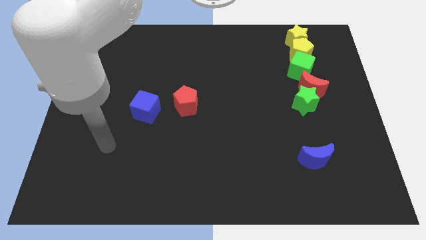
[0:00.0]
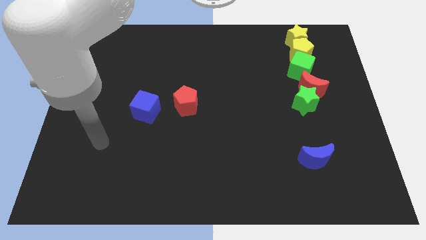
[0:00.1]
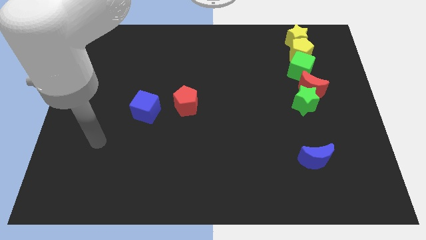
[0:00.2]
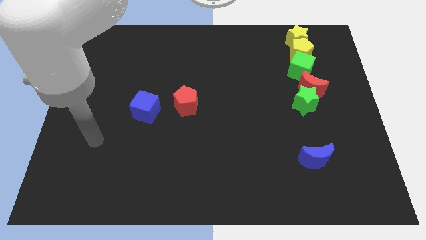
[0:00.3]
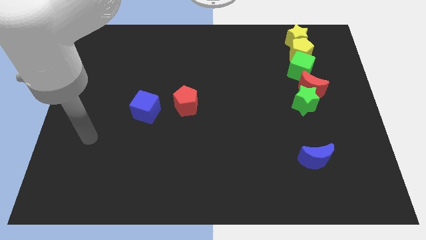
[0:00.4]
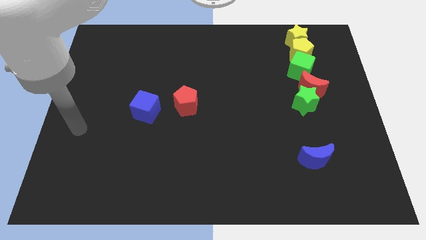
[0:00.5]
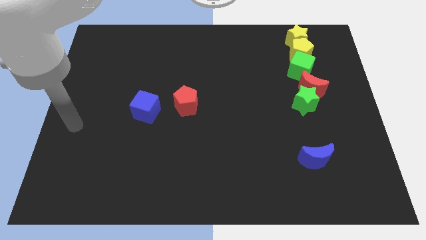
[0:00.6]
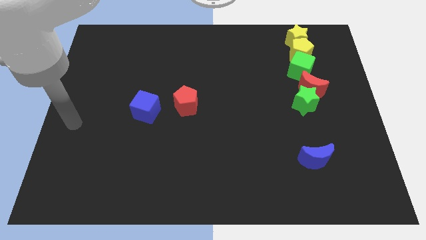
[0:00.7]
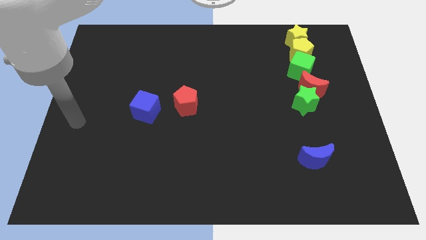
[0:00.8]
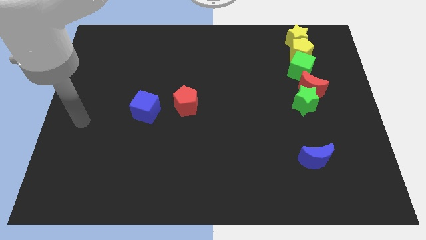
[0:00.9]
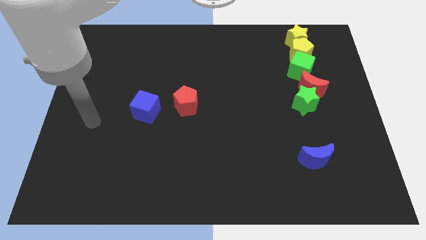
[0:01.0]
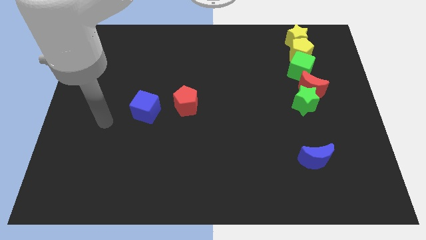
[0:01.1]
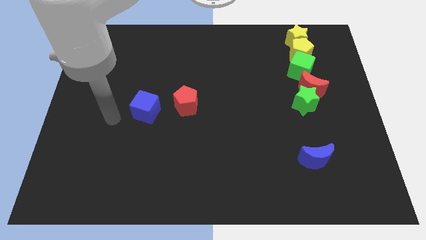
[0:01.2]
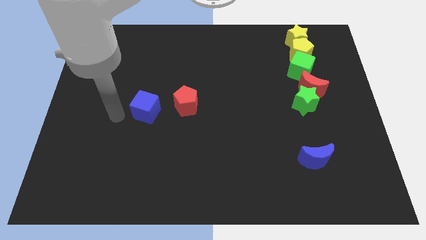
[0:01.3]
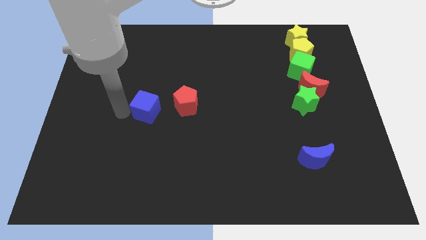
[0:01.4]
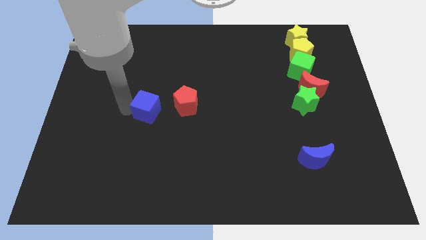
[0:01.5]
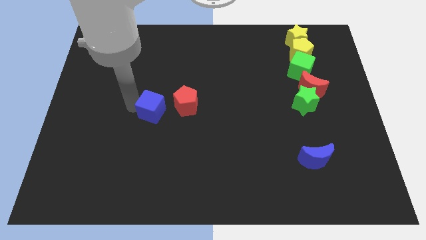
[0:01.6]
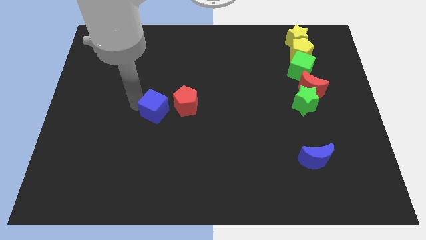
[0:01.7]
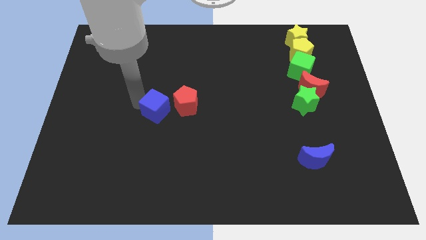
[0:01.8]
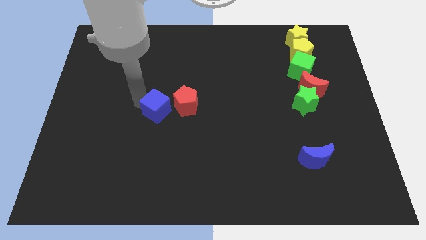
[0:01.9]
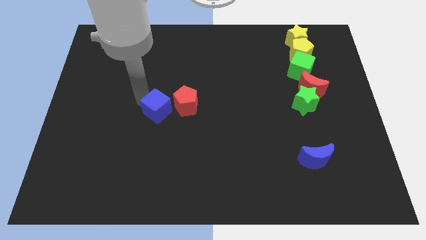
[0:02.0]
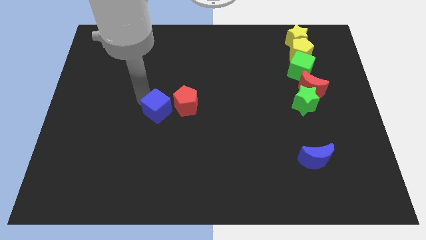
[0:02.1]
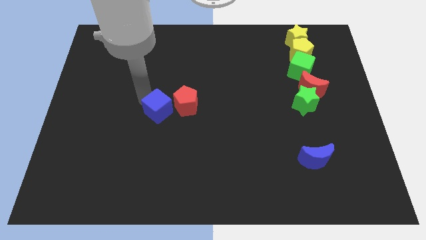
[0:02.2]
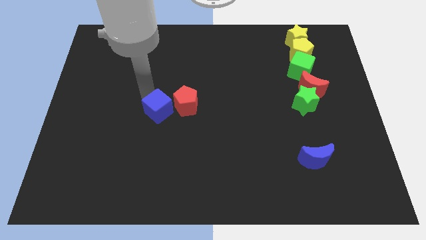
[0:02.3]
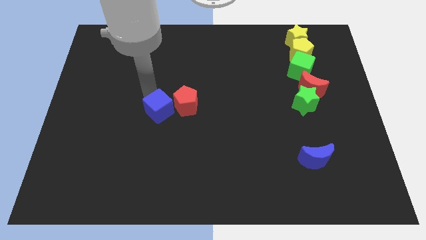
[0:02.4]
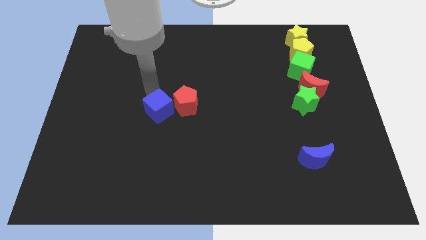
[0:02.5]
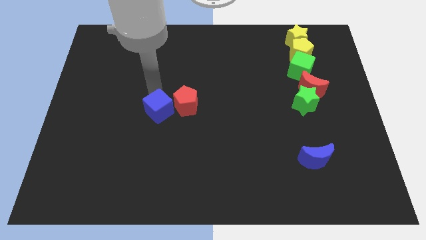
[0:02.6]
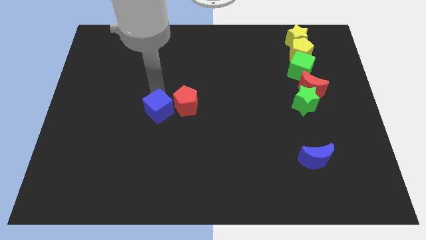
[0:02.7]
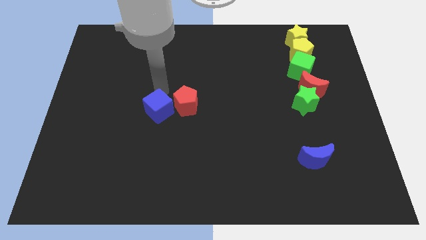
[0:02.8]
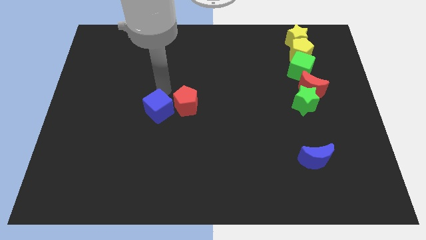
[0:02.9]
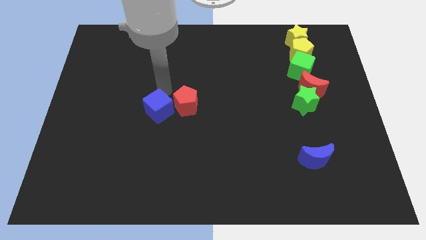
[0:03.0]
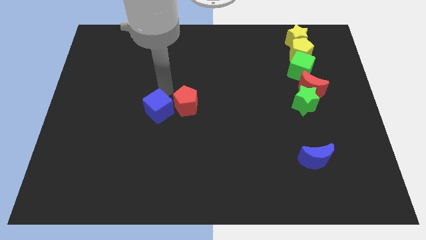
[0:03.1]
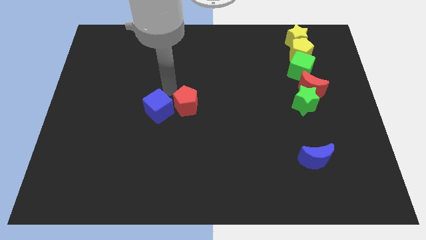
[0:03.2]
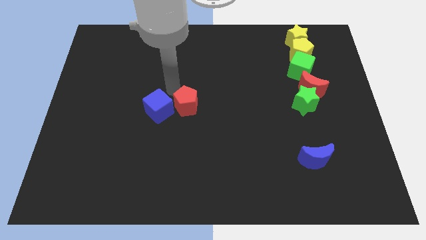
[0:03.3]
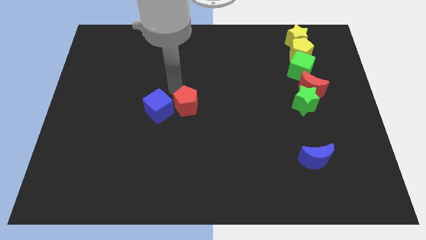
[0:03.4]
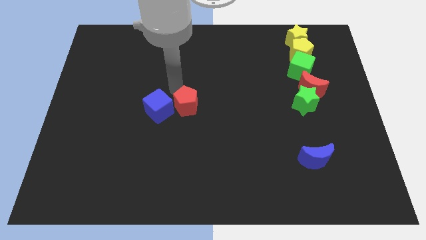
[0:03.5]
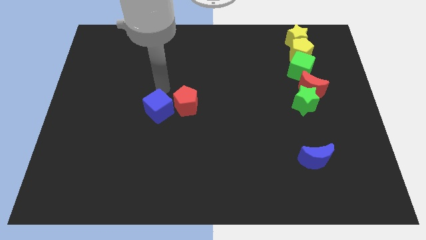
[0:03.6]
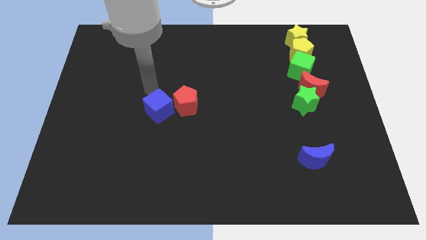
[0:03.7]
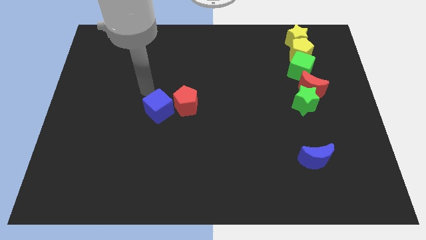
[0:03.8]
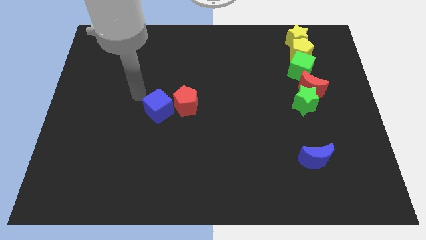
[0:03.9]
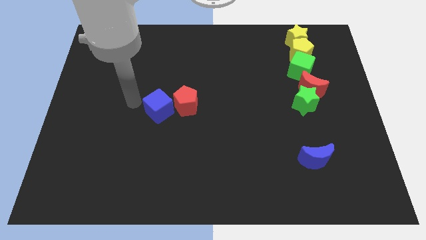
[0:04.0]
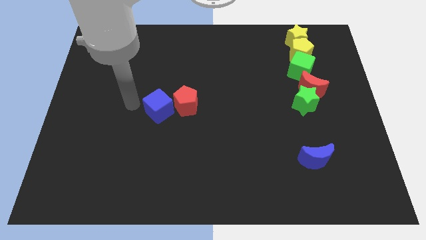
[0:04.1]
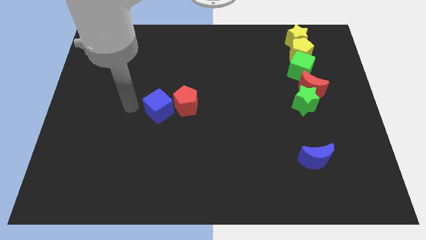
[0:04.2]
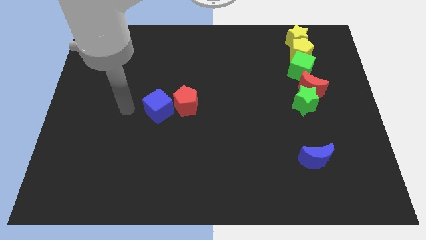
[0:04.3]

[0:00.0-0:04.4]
move the blue cube close to the red pentagon

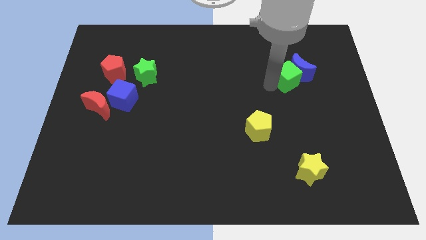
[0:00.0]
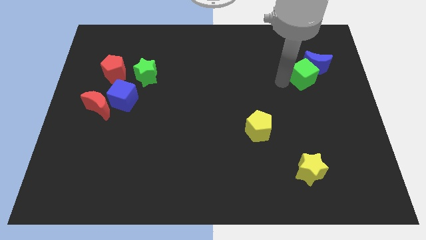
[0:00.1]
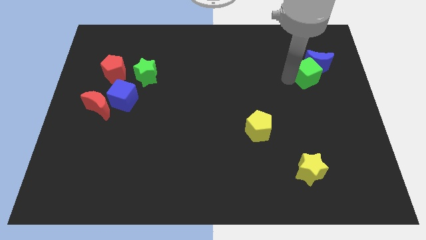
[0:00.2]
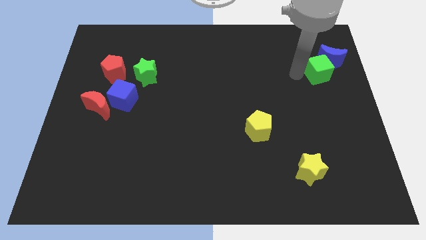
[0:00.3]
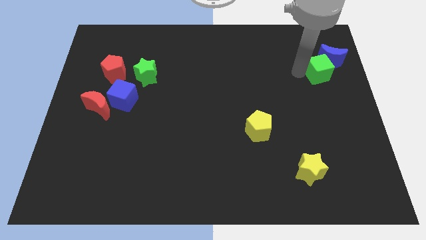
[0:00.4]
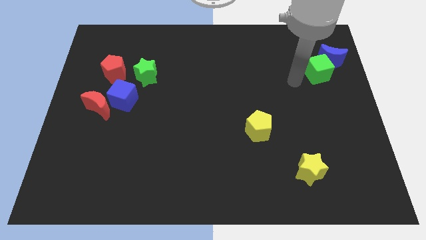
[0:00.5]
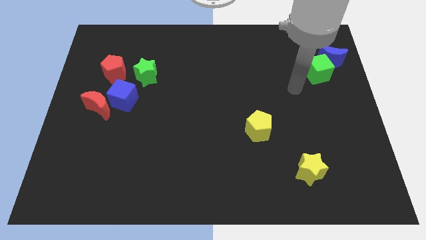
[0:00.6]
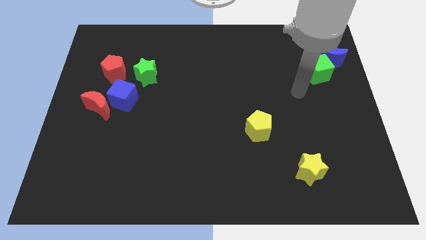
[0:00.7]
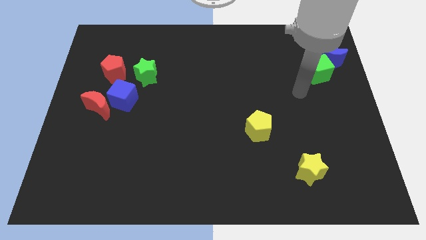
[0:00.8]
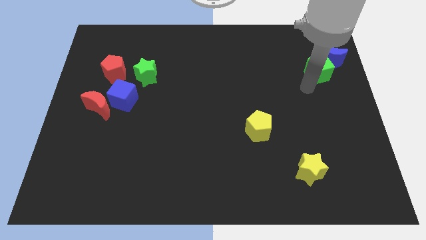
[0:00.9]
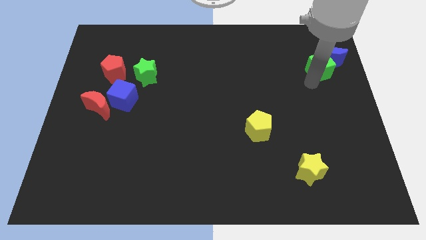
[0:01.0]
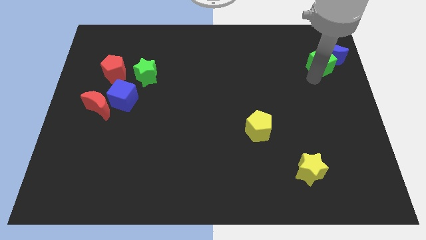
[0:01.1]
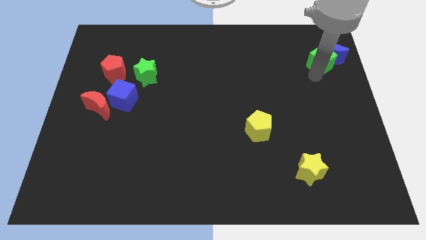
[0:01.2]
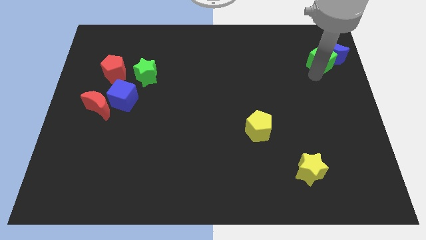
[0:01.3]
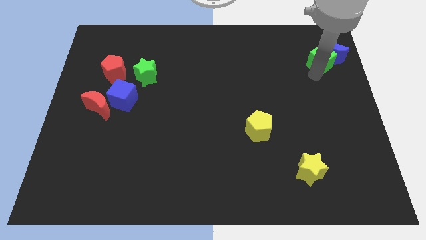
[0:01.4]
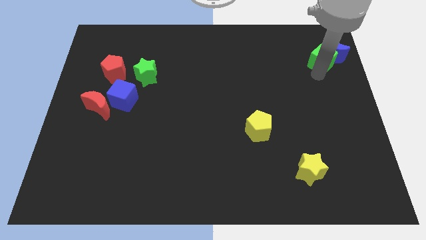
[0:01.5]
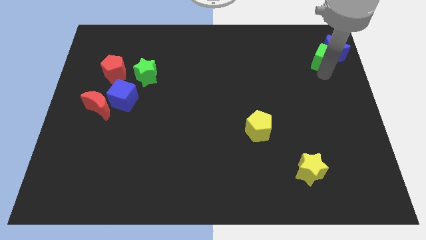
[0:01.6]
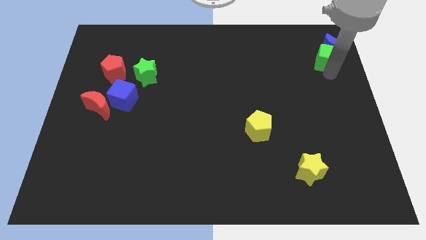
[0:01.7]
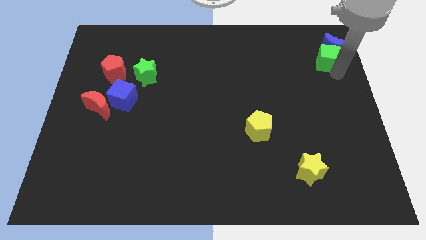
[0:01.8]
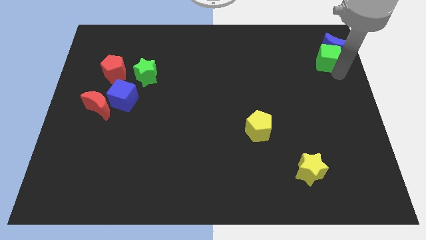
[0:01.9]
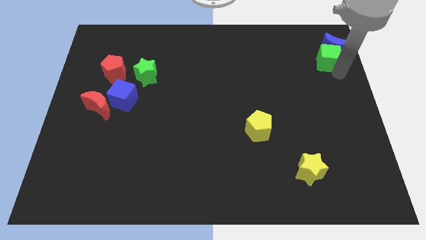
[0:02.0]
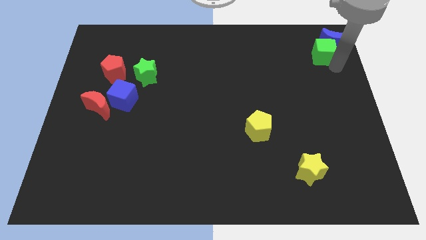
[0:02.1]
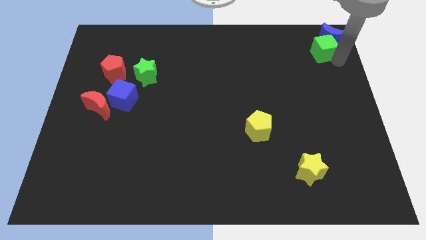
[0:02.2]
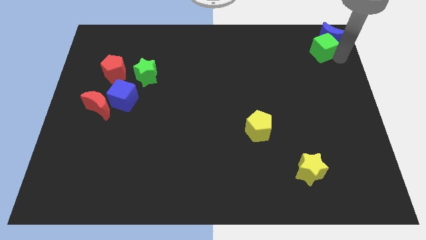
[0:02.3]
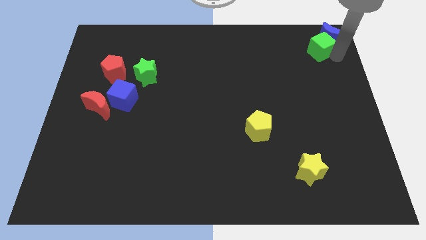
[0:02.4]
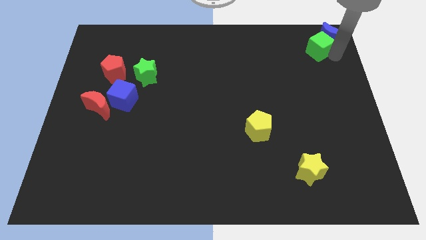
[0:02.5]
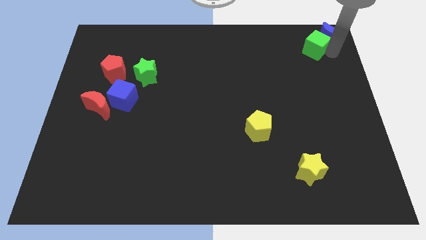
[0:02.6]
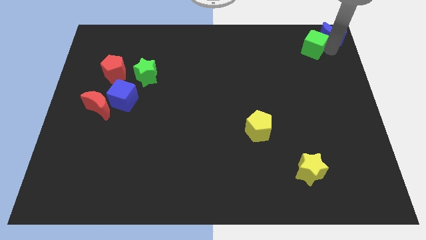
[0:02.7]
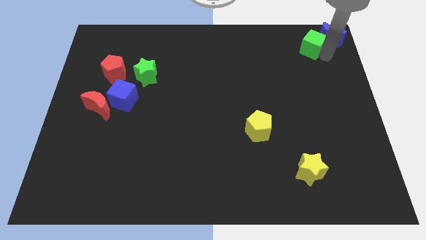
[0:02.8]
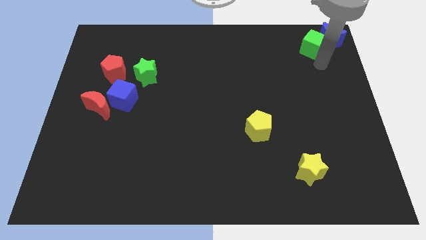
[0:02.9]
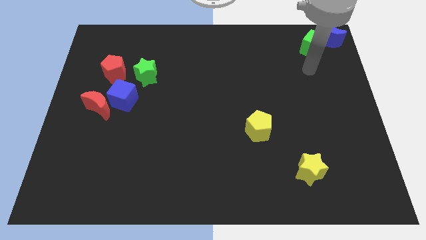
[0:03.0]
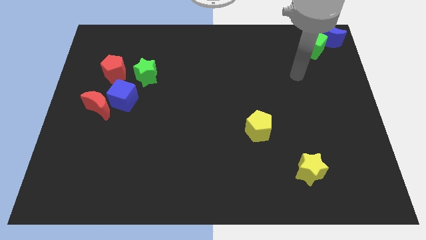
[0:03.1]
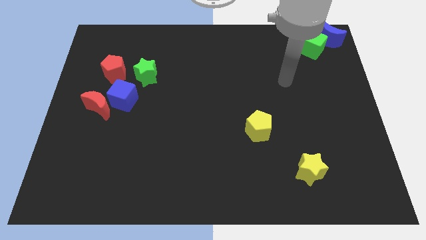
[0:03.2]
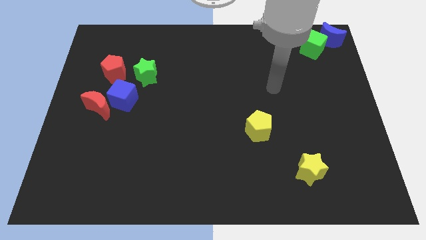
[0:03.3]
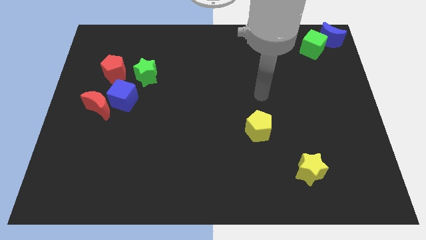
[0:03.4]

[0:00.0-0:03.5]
slide the green cube along with the blue moon diagonally top right to the yellow star

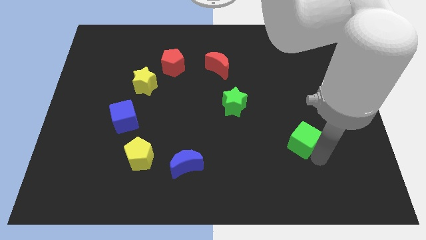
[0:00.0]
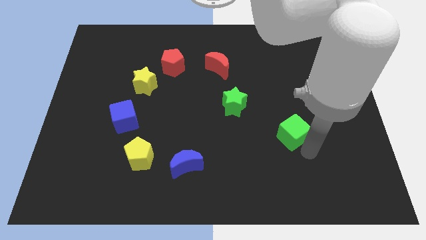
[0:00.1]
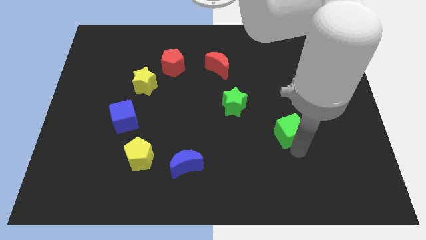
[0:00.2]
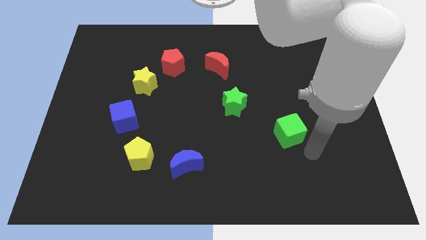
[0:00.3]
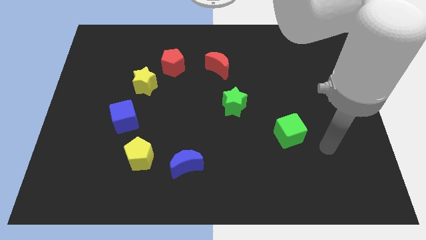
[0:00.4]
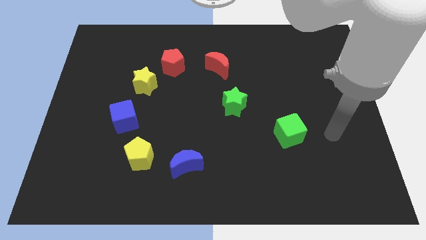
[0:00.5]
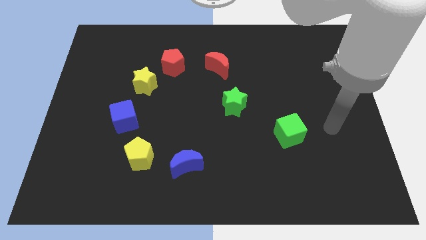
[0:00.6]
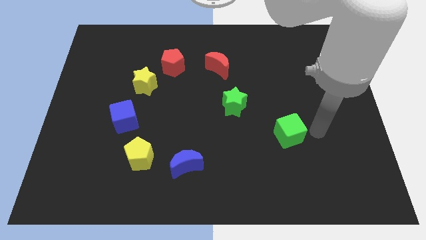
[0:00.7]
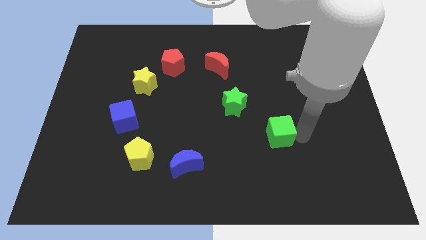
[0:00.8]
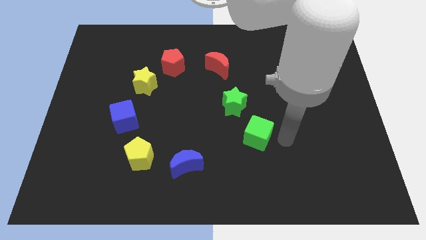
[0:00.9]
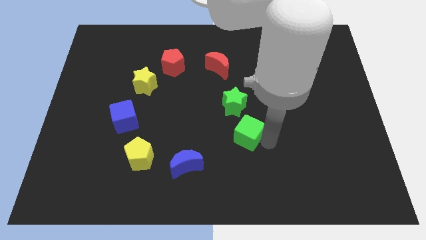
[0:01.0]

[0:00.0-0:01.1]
push green cube below green star
